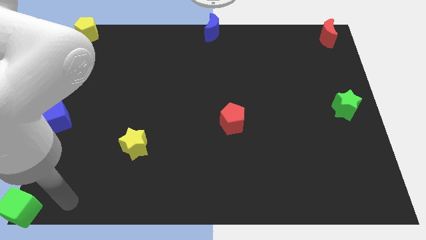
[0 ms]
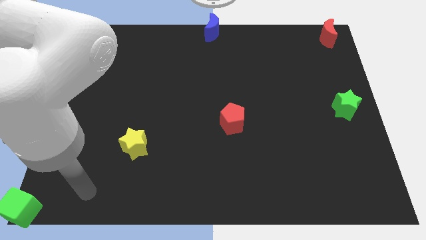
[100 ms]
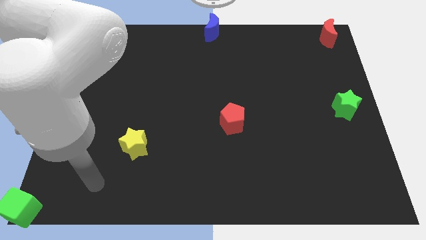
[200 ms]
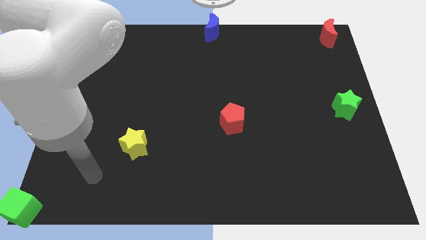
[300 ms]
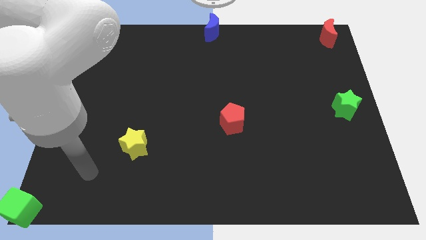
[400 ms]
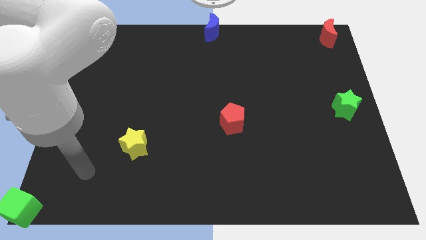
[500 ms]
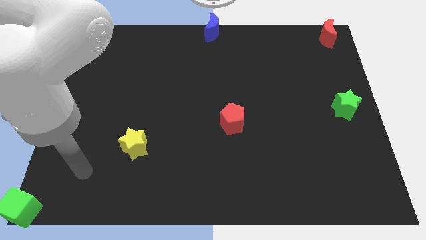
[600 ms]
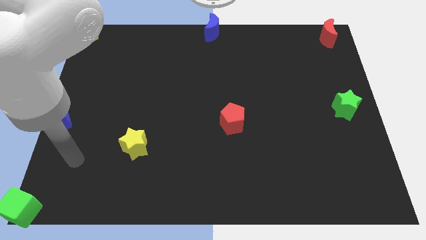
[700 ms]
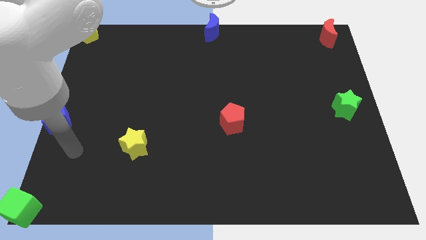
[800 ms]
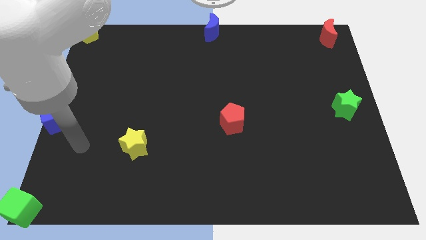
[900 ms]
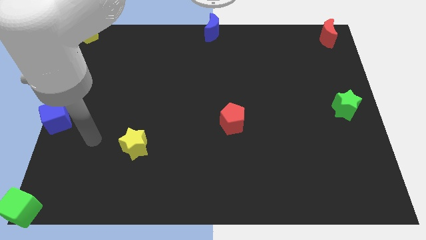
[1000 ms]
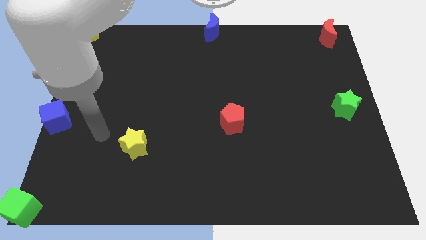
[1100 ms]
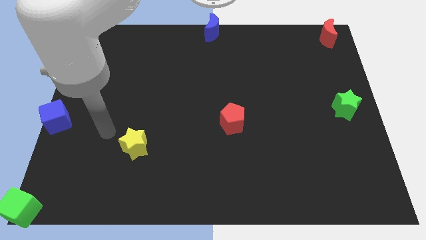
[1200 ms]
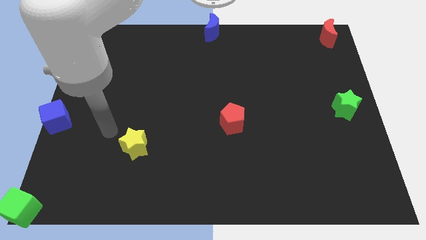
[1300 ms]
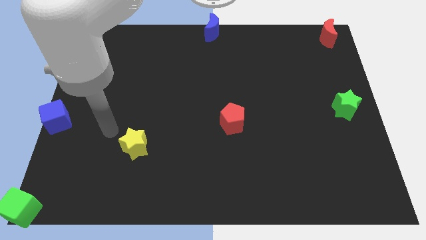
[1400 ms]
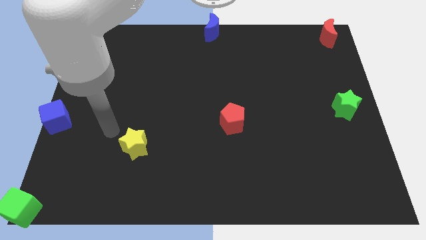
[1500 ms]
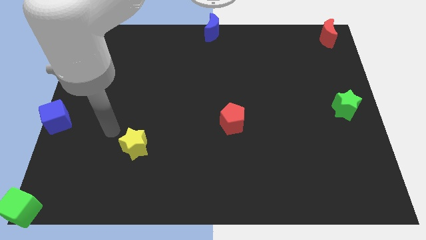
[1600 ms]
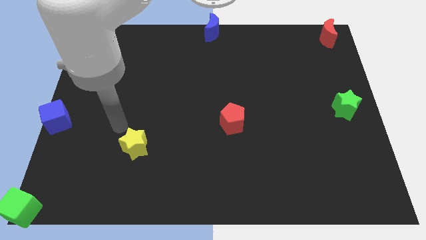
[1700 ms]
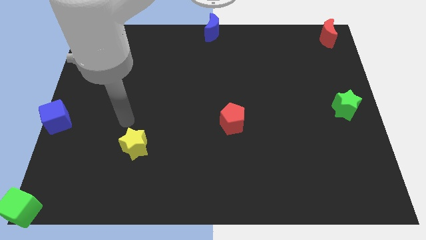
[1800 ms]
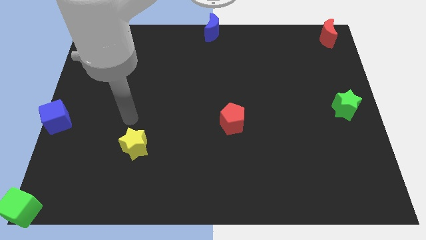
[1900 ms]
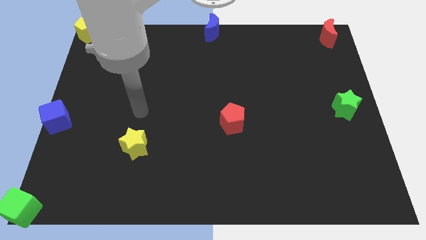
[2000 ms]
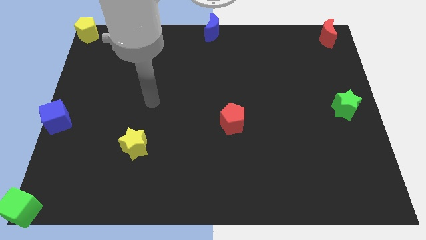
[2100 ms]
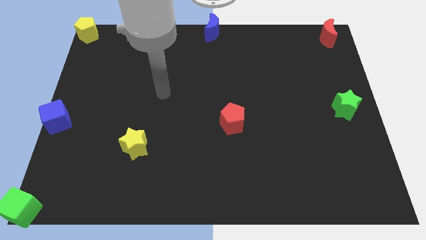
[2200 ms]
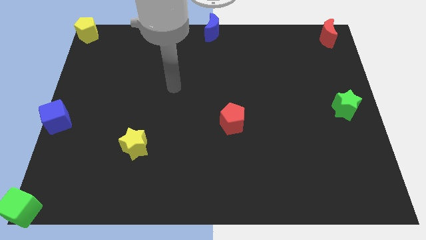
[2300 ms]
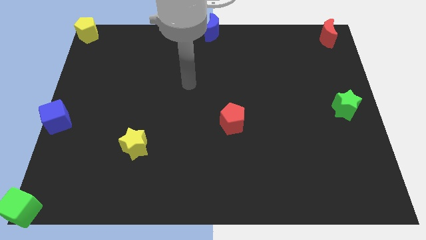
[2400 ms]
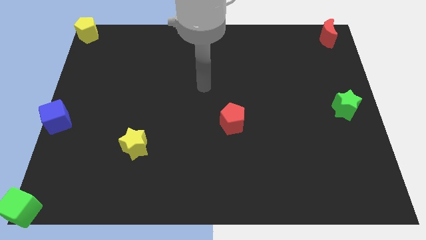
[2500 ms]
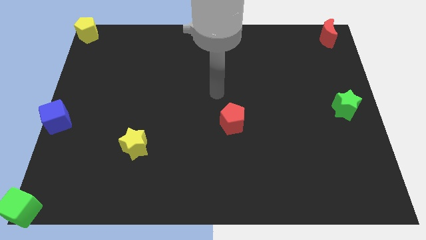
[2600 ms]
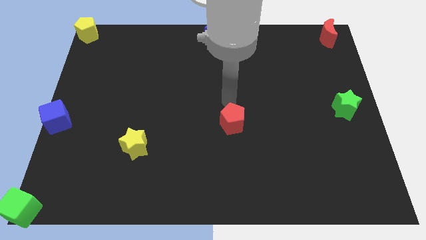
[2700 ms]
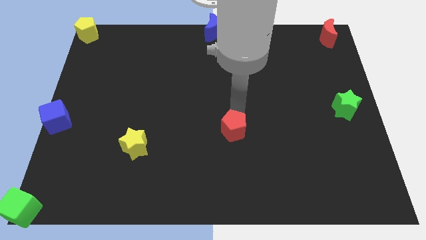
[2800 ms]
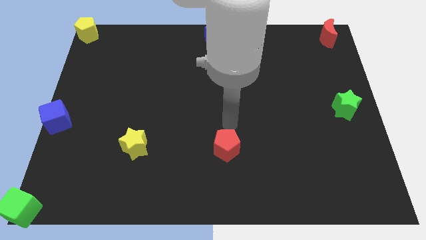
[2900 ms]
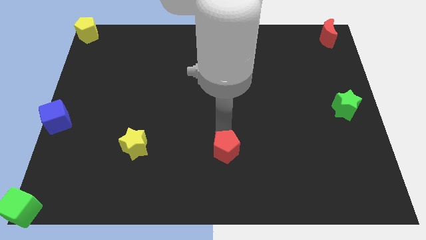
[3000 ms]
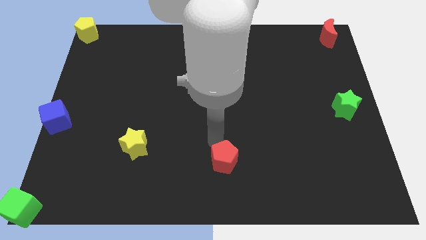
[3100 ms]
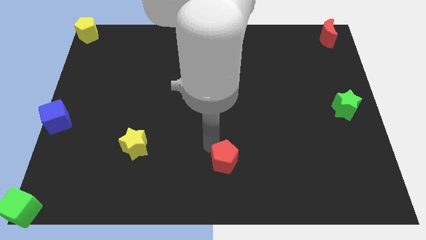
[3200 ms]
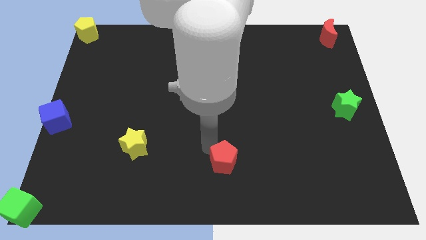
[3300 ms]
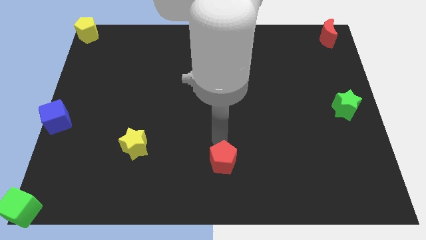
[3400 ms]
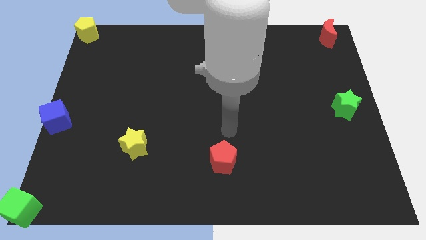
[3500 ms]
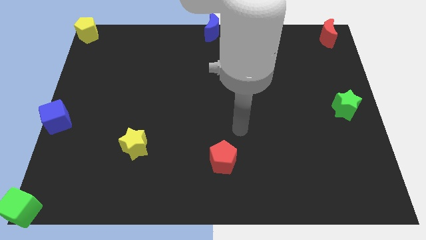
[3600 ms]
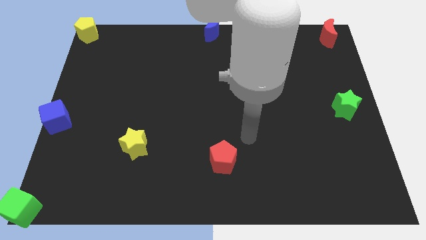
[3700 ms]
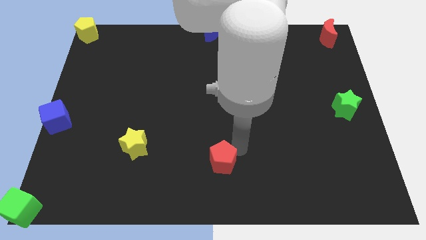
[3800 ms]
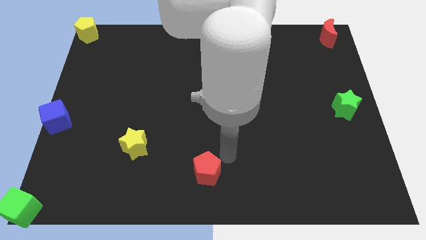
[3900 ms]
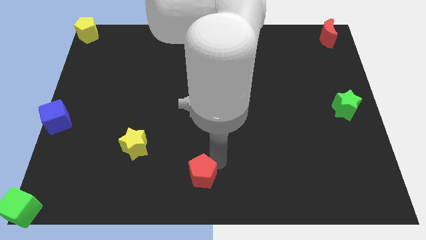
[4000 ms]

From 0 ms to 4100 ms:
push the red pentagon to the bottom of the board

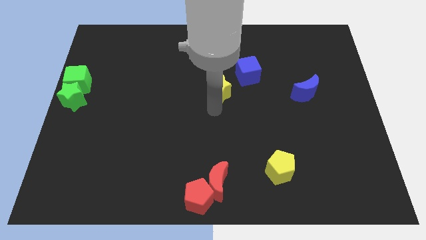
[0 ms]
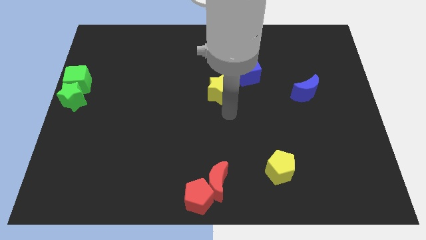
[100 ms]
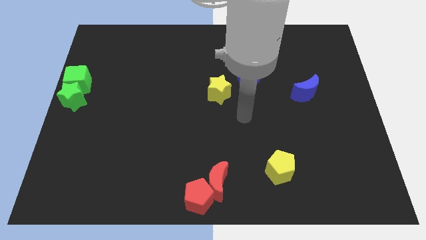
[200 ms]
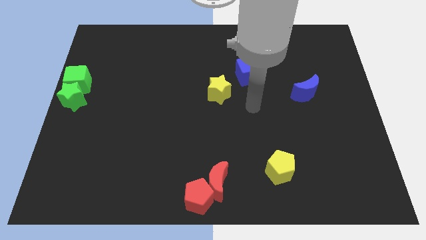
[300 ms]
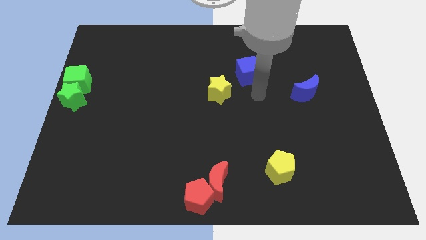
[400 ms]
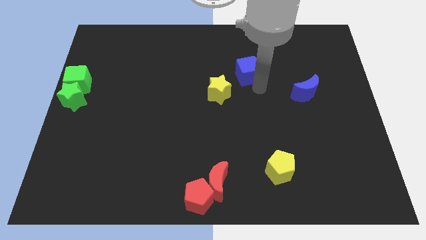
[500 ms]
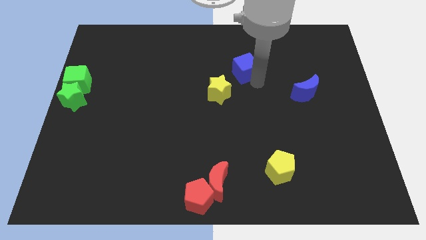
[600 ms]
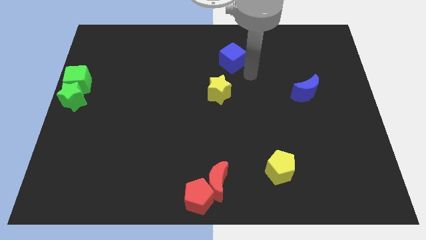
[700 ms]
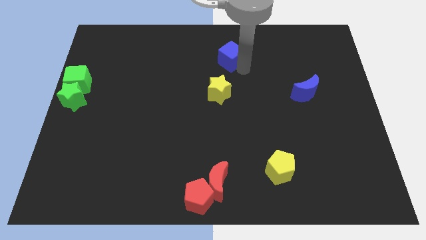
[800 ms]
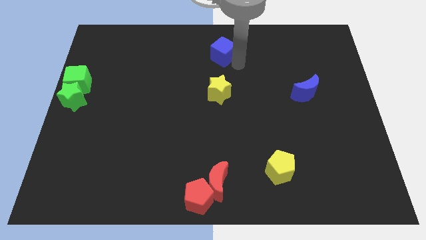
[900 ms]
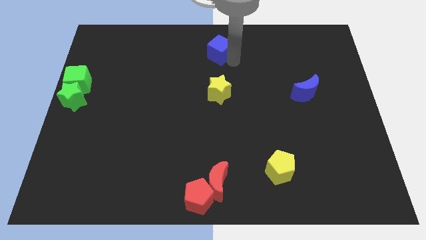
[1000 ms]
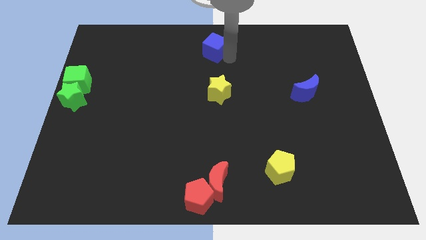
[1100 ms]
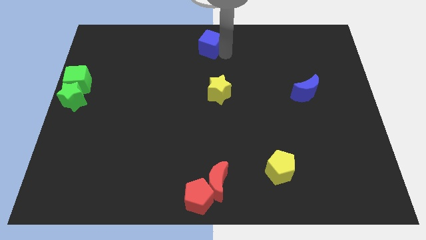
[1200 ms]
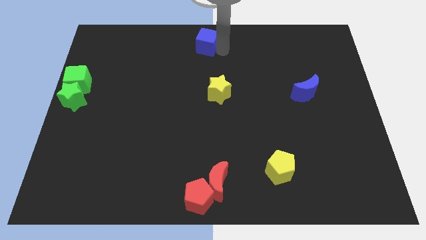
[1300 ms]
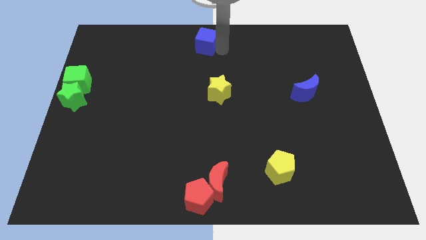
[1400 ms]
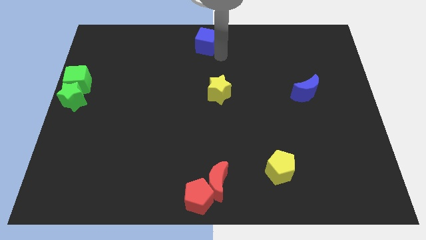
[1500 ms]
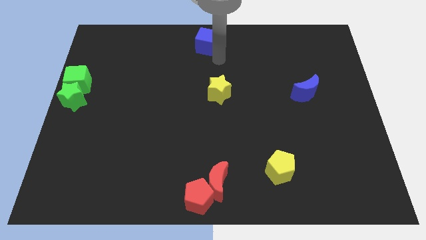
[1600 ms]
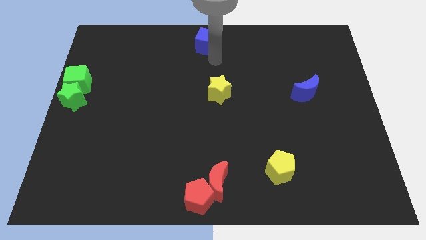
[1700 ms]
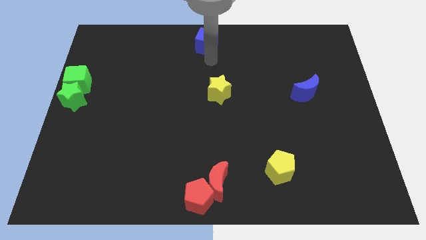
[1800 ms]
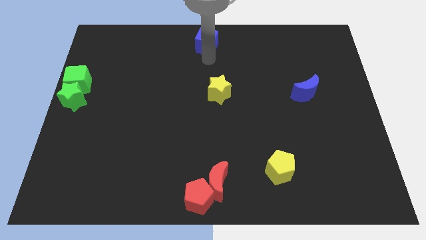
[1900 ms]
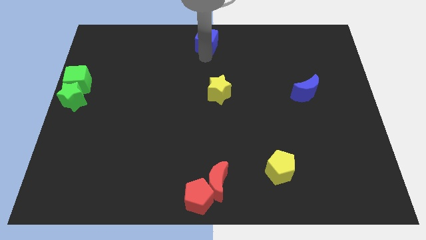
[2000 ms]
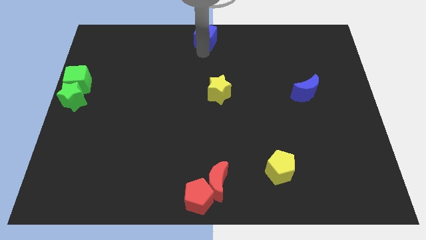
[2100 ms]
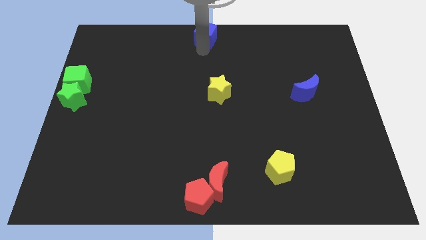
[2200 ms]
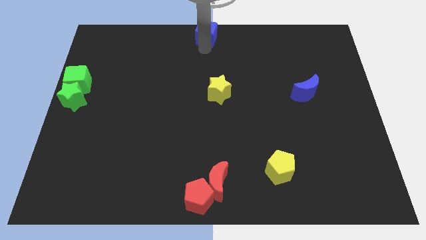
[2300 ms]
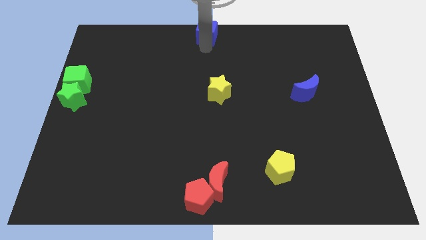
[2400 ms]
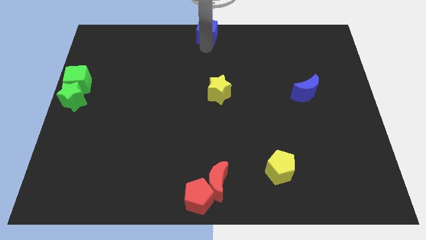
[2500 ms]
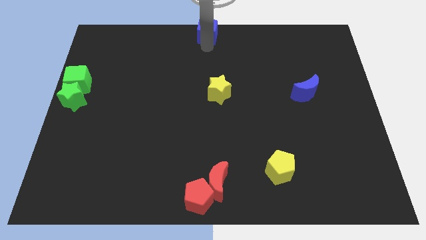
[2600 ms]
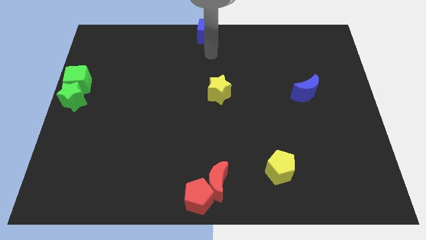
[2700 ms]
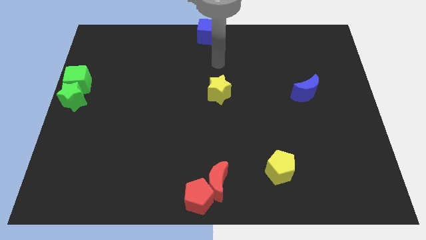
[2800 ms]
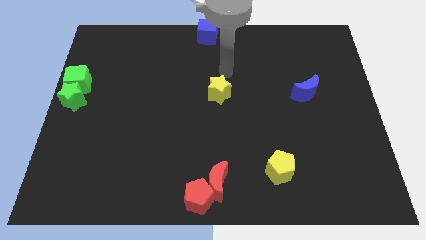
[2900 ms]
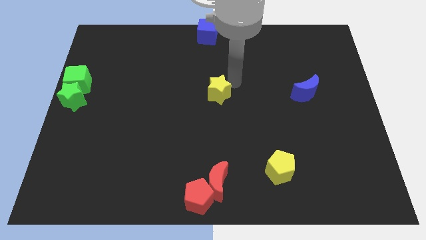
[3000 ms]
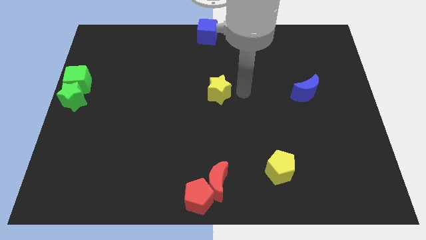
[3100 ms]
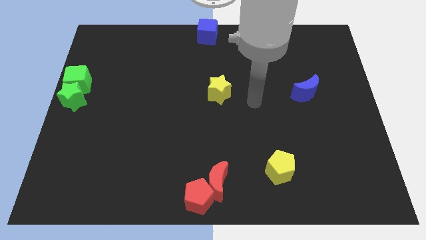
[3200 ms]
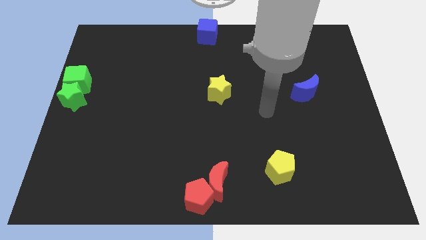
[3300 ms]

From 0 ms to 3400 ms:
put the blue cube at the top center

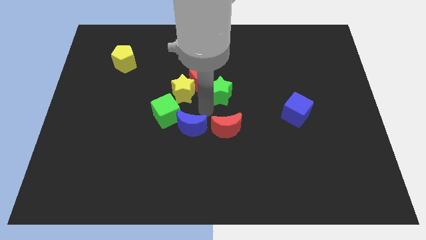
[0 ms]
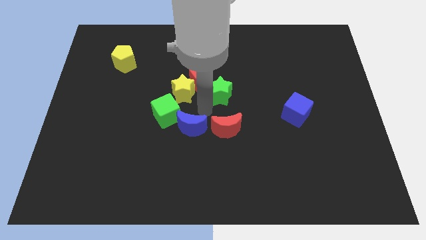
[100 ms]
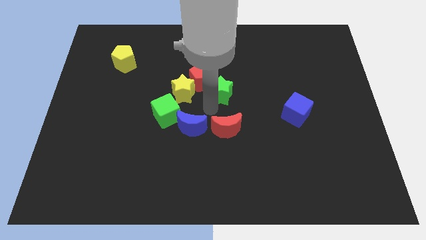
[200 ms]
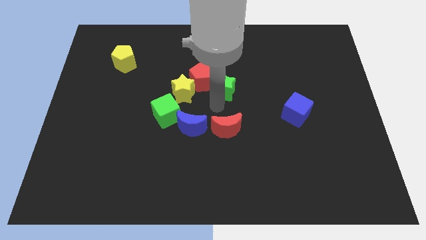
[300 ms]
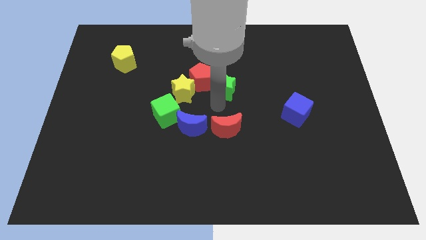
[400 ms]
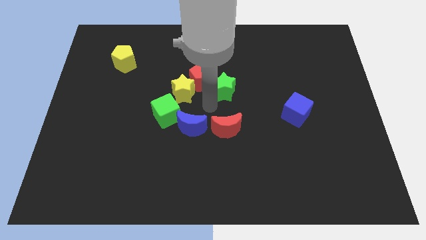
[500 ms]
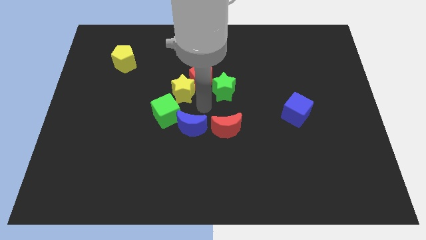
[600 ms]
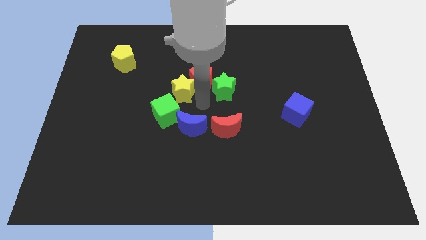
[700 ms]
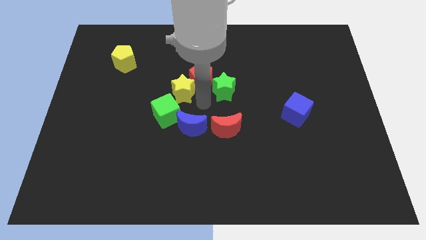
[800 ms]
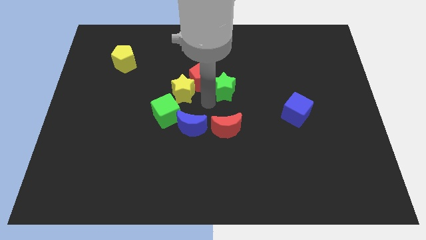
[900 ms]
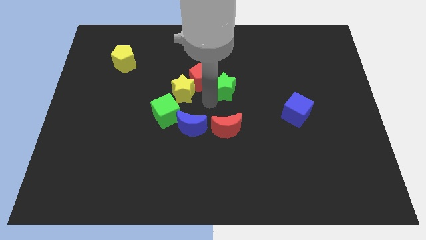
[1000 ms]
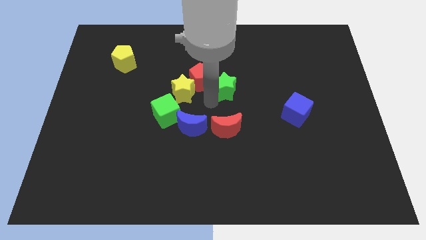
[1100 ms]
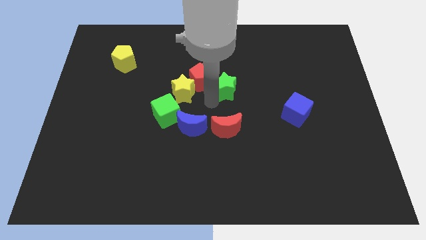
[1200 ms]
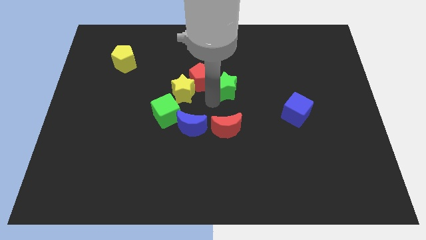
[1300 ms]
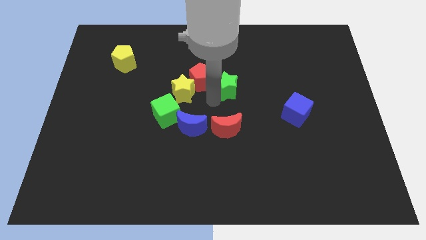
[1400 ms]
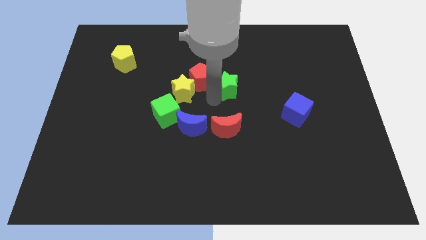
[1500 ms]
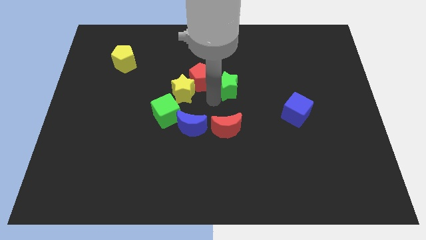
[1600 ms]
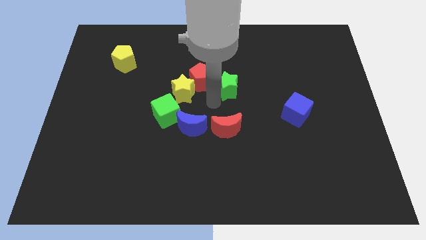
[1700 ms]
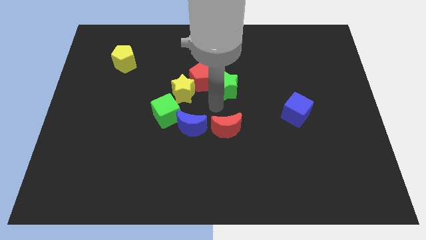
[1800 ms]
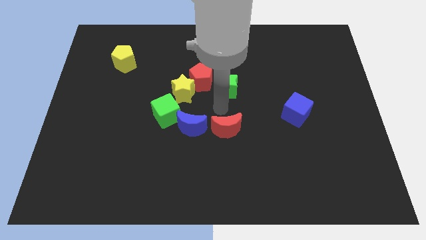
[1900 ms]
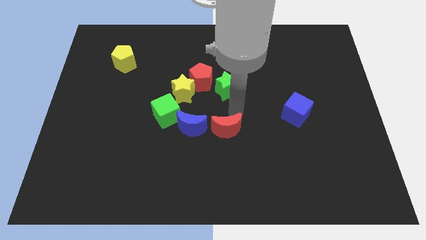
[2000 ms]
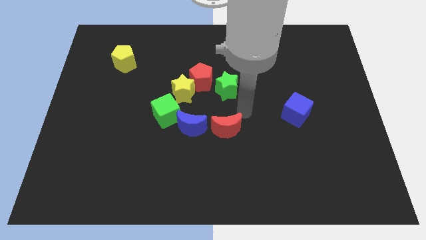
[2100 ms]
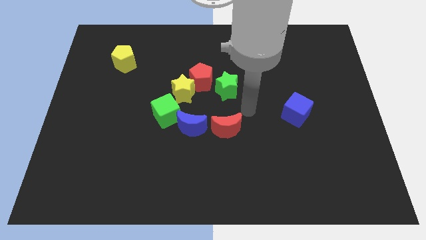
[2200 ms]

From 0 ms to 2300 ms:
place the green star at the bottom right side of red pentagon
